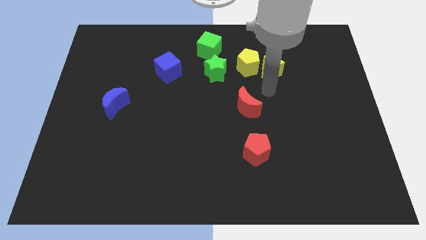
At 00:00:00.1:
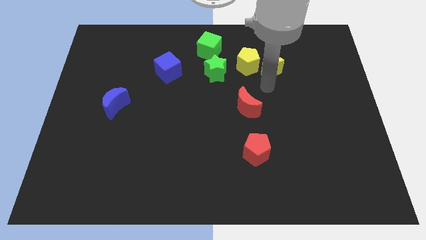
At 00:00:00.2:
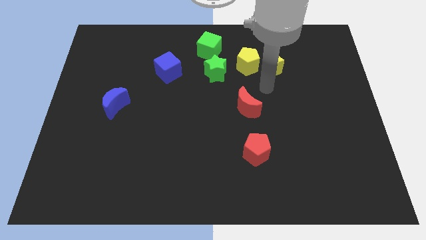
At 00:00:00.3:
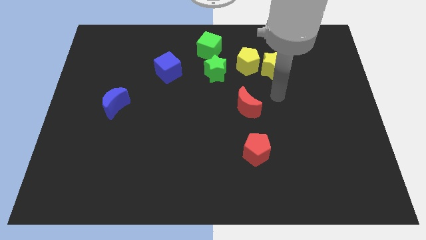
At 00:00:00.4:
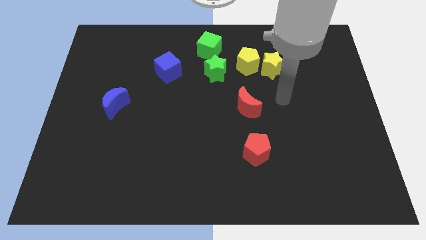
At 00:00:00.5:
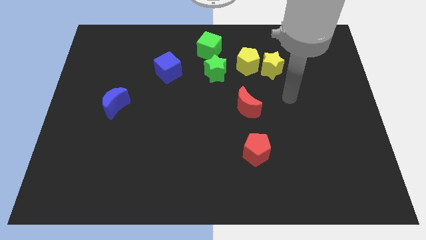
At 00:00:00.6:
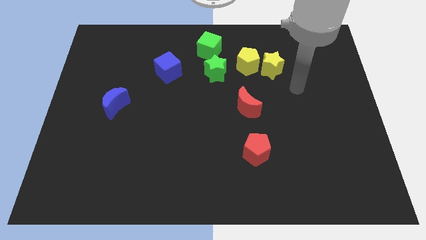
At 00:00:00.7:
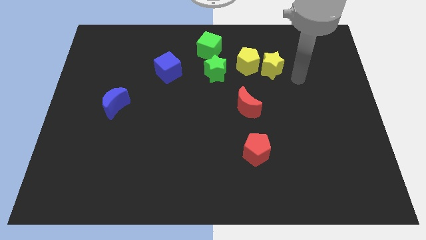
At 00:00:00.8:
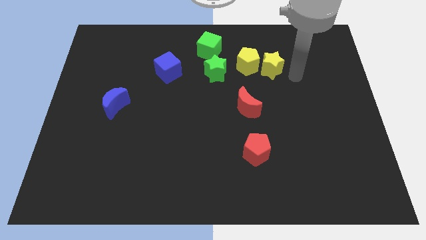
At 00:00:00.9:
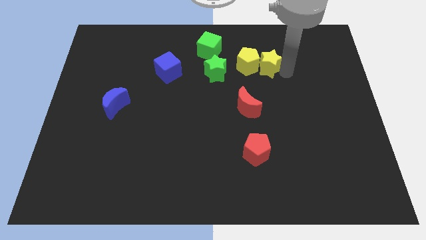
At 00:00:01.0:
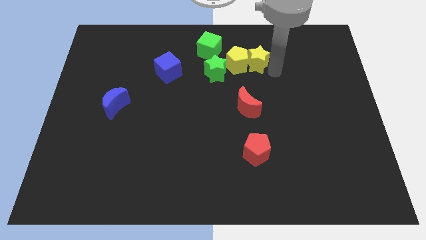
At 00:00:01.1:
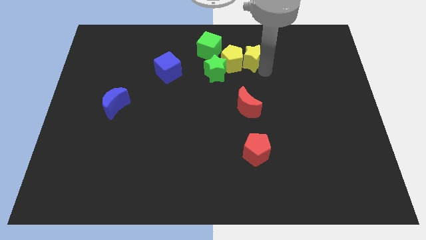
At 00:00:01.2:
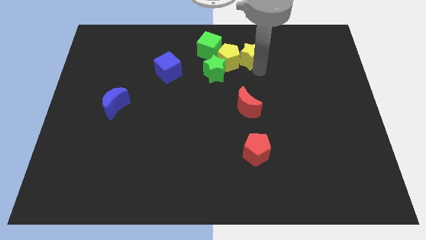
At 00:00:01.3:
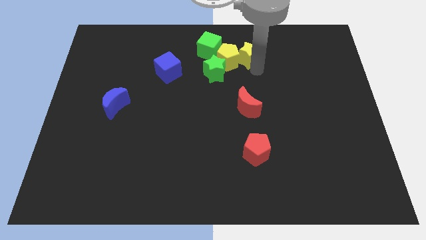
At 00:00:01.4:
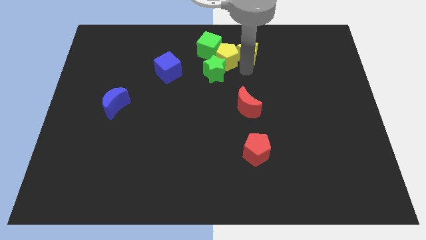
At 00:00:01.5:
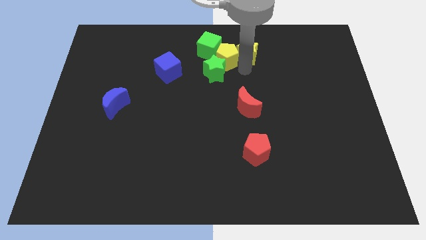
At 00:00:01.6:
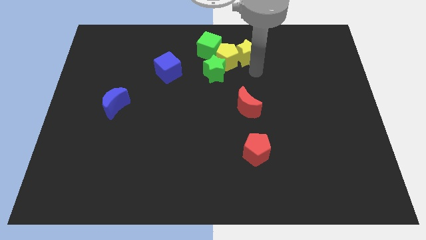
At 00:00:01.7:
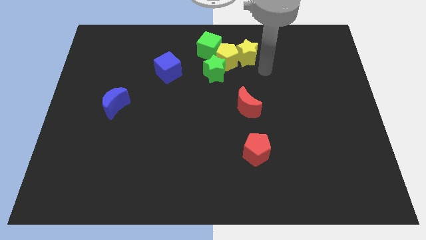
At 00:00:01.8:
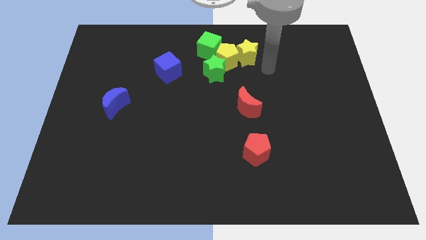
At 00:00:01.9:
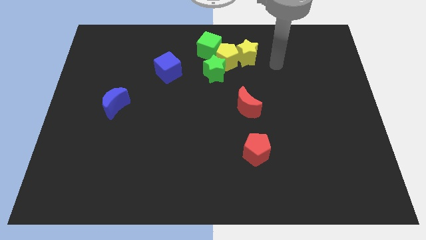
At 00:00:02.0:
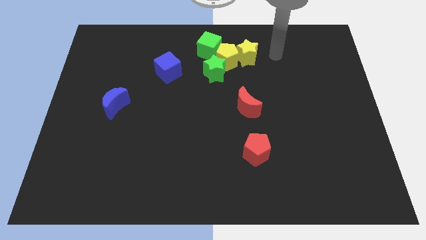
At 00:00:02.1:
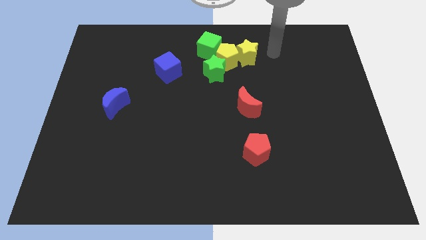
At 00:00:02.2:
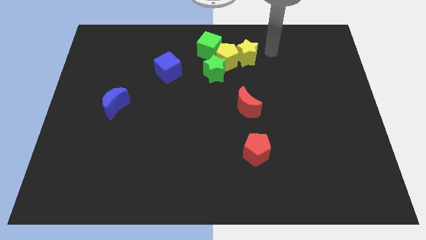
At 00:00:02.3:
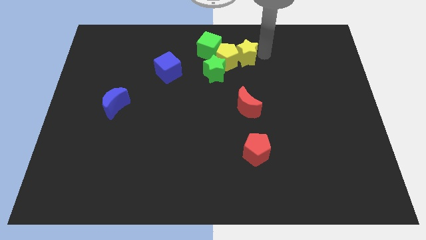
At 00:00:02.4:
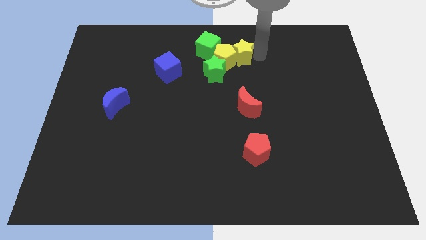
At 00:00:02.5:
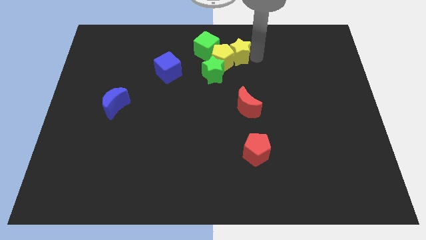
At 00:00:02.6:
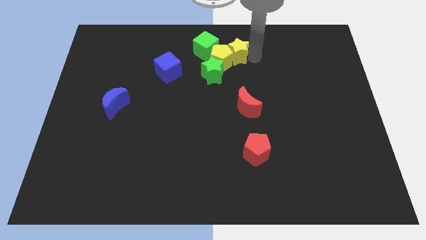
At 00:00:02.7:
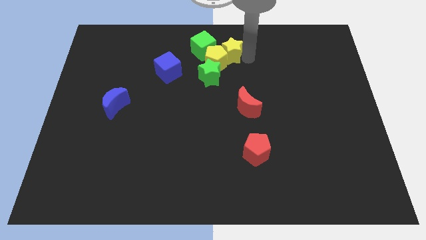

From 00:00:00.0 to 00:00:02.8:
push the yellow blocks into green blocks

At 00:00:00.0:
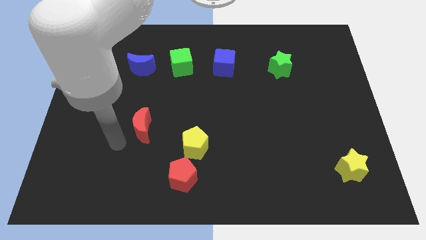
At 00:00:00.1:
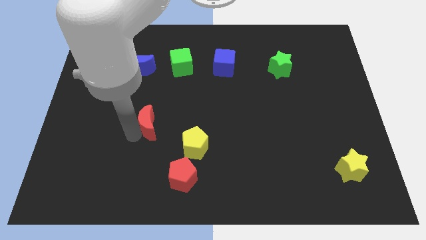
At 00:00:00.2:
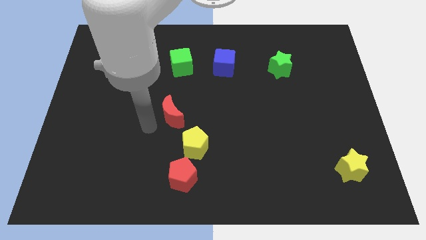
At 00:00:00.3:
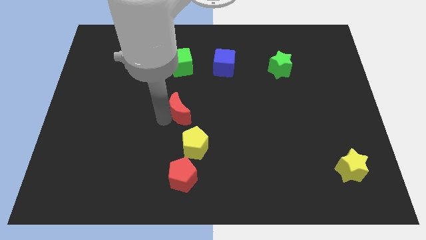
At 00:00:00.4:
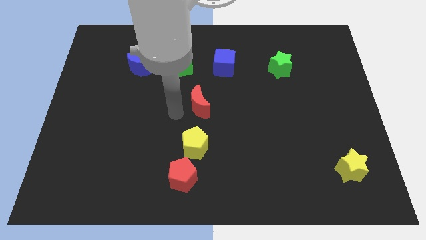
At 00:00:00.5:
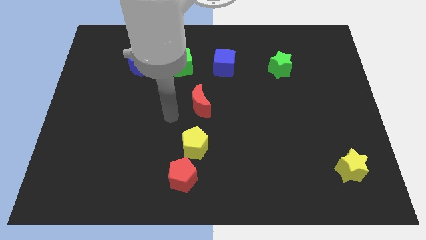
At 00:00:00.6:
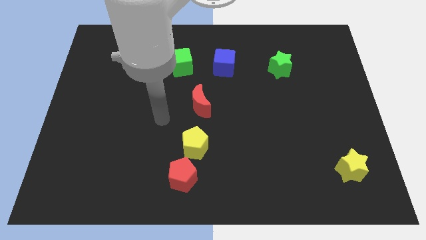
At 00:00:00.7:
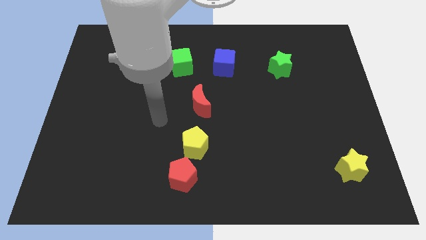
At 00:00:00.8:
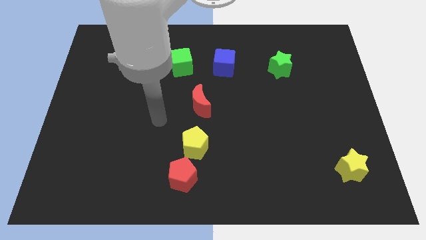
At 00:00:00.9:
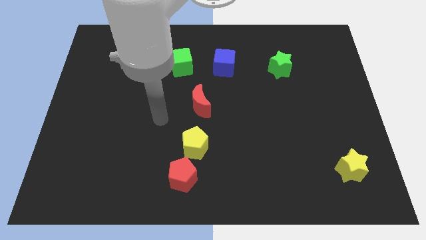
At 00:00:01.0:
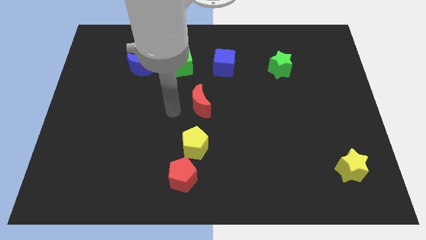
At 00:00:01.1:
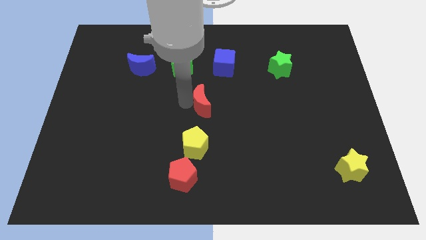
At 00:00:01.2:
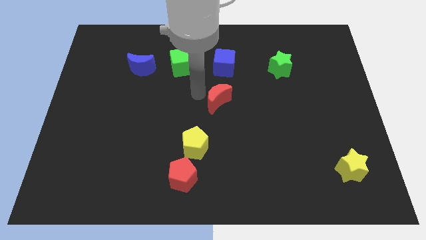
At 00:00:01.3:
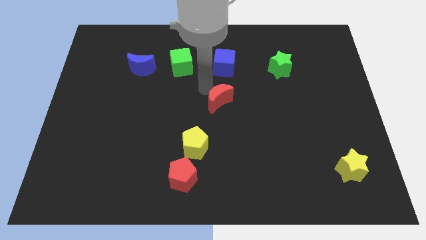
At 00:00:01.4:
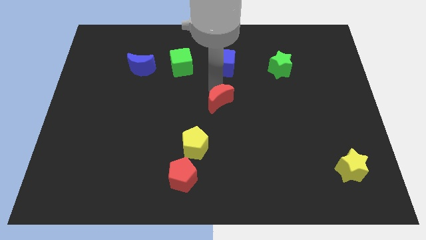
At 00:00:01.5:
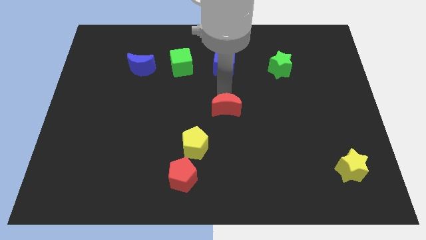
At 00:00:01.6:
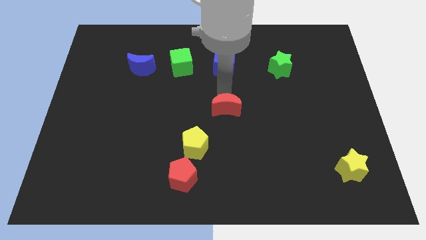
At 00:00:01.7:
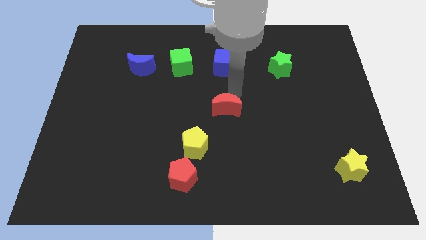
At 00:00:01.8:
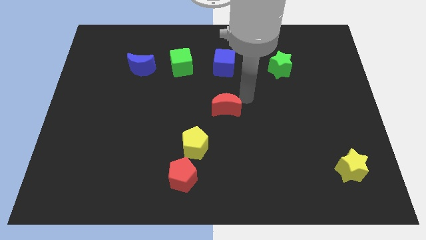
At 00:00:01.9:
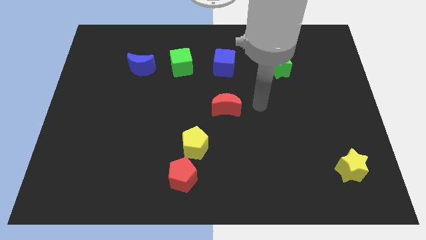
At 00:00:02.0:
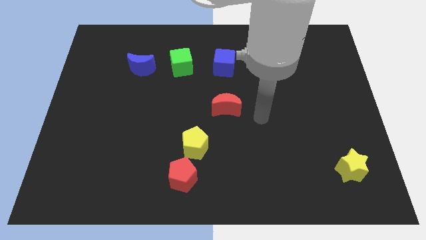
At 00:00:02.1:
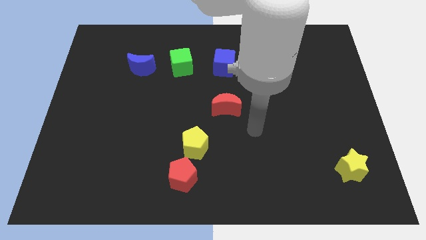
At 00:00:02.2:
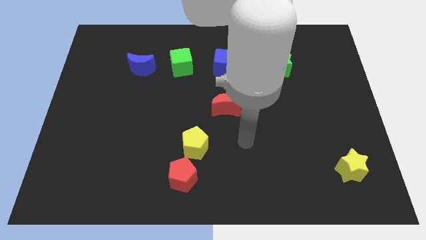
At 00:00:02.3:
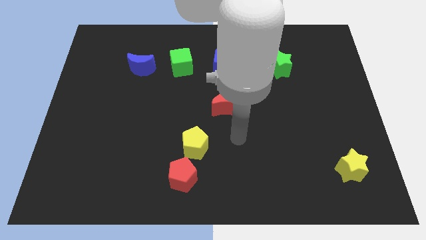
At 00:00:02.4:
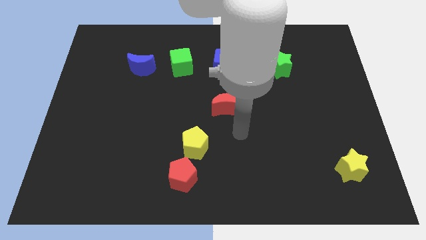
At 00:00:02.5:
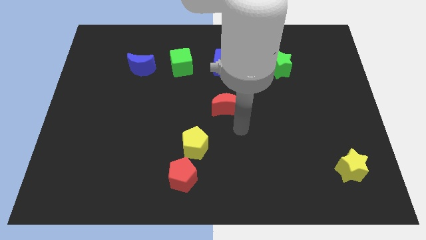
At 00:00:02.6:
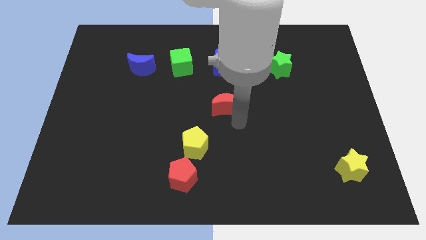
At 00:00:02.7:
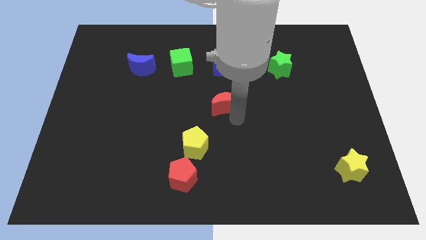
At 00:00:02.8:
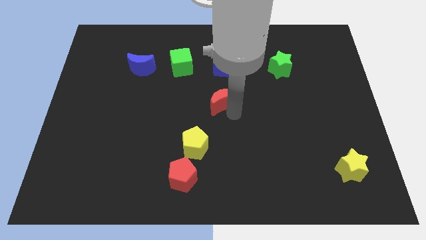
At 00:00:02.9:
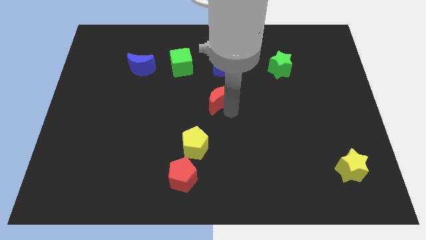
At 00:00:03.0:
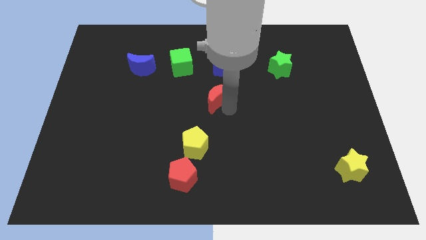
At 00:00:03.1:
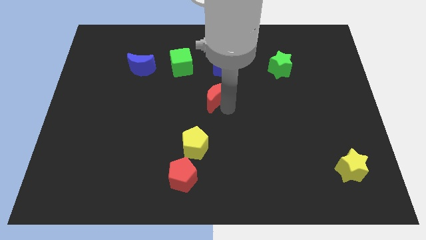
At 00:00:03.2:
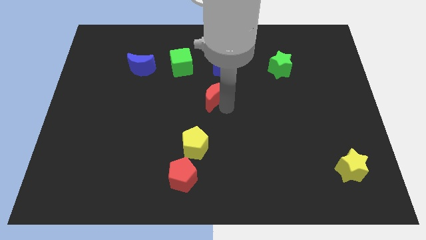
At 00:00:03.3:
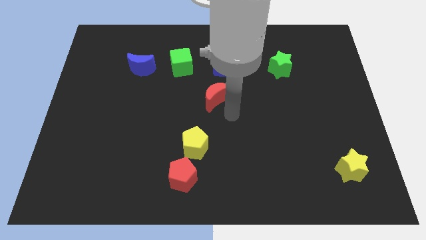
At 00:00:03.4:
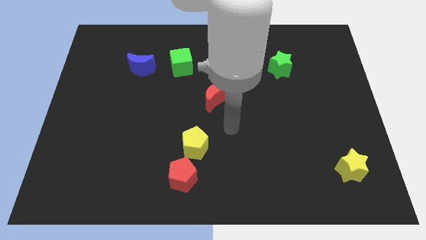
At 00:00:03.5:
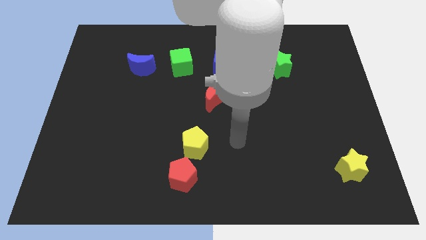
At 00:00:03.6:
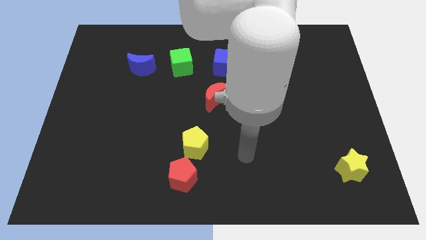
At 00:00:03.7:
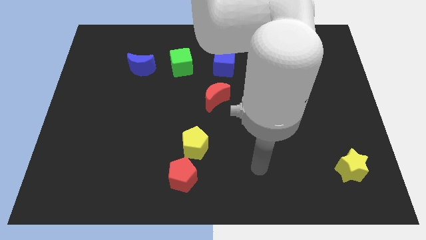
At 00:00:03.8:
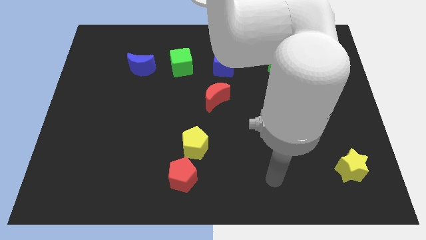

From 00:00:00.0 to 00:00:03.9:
slide the red moon vertically below the blue cube

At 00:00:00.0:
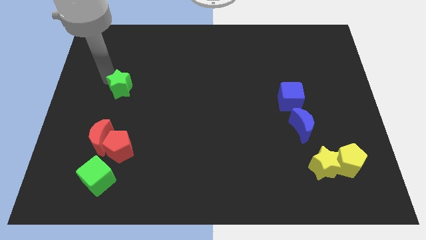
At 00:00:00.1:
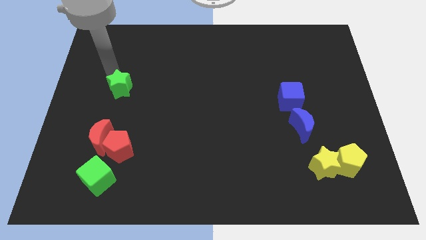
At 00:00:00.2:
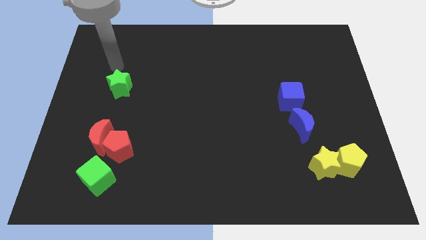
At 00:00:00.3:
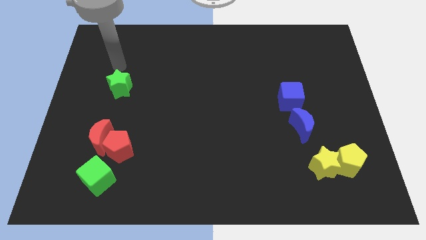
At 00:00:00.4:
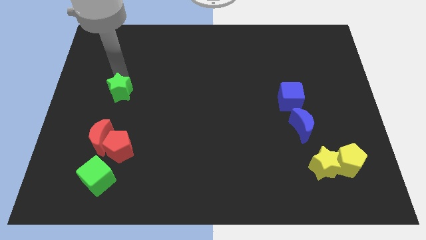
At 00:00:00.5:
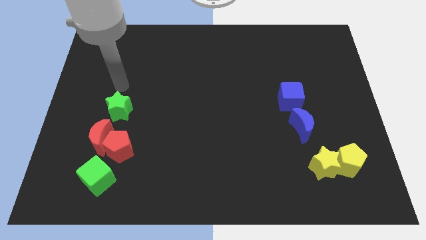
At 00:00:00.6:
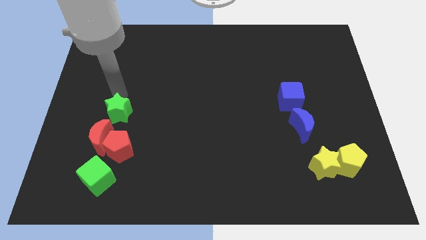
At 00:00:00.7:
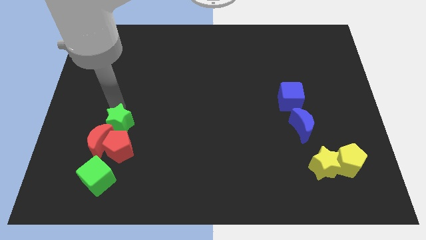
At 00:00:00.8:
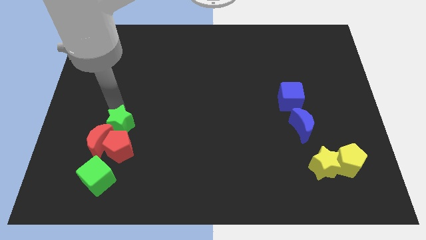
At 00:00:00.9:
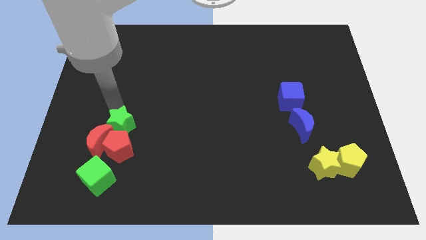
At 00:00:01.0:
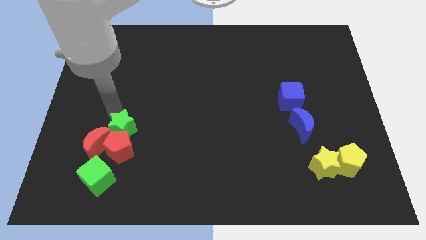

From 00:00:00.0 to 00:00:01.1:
push the green star into the red blocks

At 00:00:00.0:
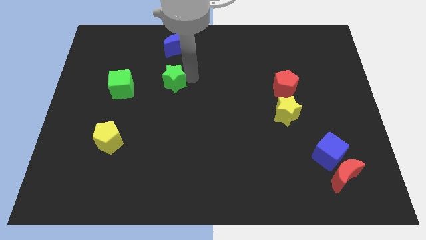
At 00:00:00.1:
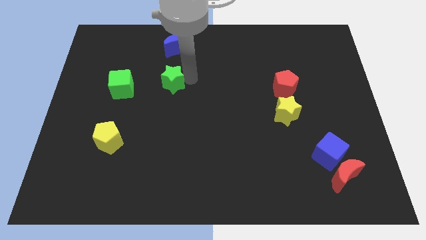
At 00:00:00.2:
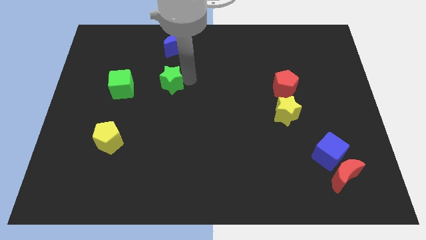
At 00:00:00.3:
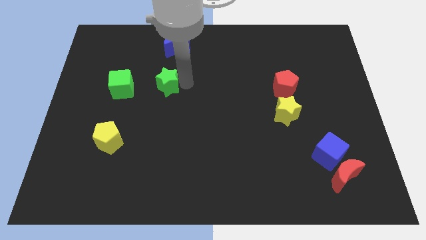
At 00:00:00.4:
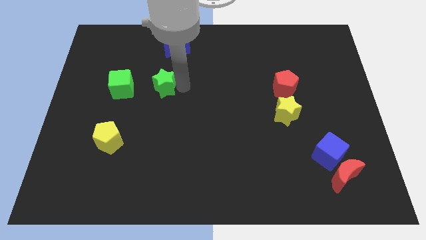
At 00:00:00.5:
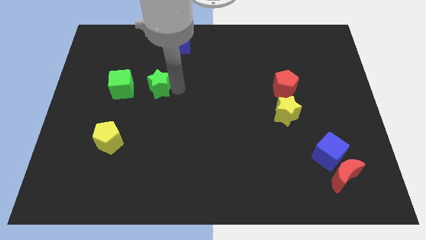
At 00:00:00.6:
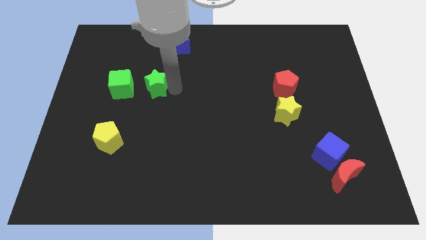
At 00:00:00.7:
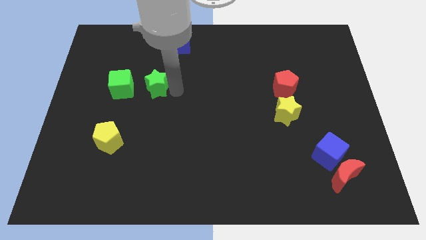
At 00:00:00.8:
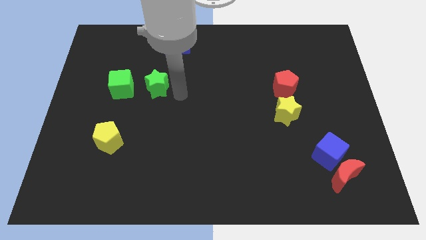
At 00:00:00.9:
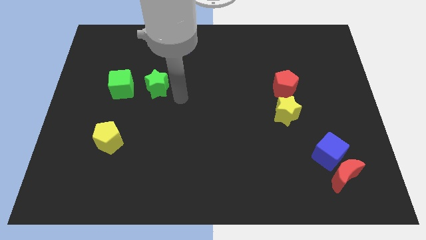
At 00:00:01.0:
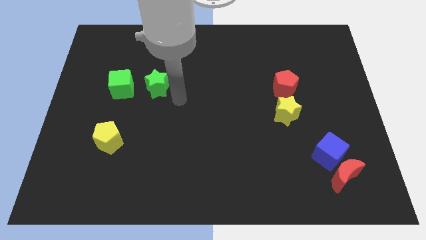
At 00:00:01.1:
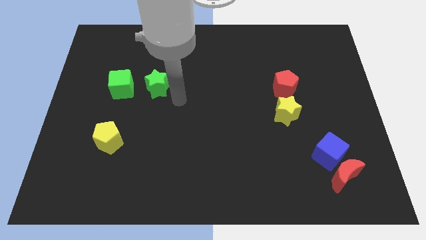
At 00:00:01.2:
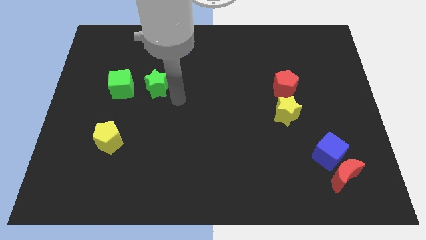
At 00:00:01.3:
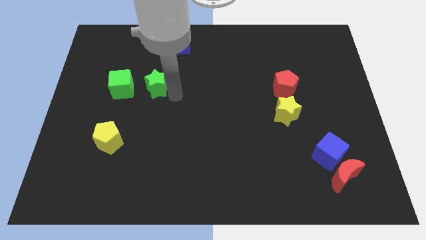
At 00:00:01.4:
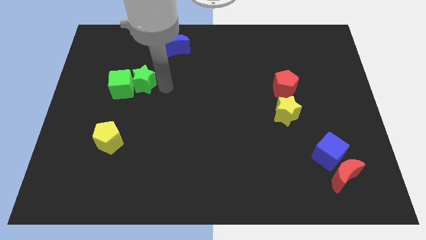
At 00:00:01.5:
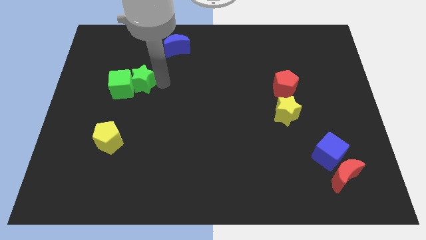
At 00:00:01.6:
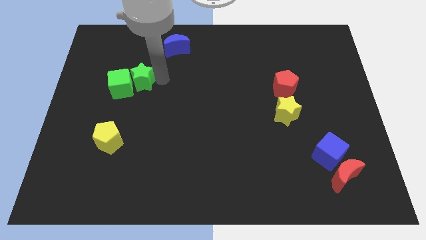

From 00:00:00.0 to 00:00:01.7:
push the green star to the right of the green cube
